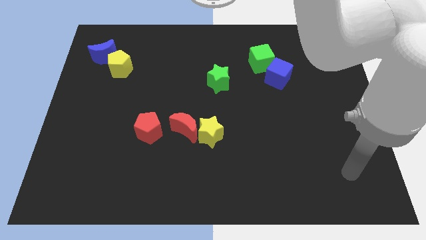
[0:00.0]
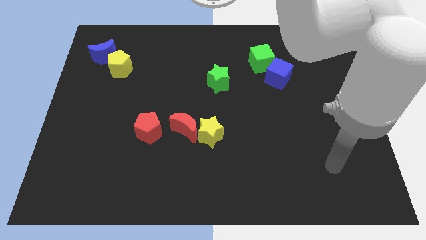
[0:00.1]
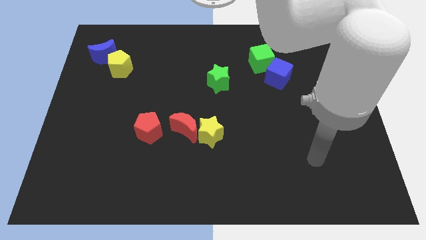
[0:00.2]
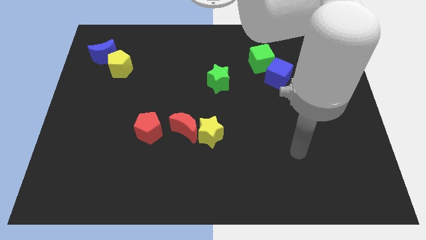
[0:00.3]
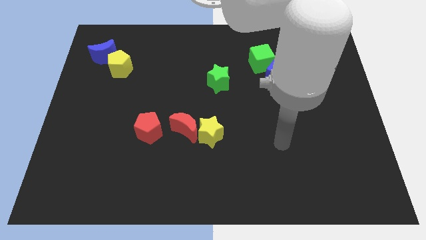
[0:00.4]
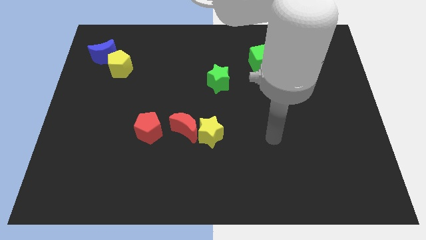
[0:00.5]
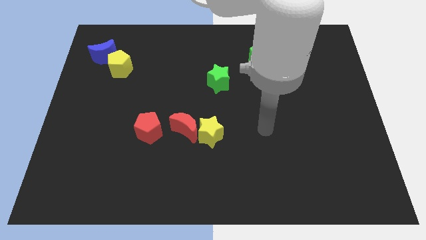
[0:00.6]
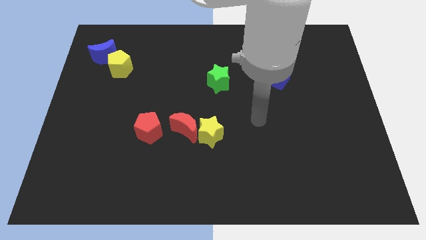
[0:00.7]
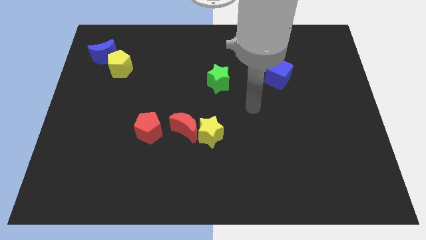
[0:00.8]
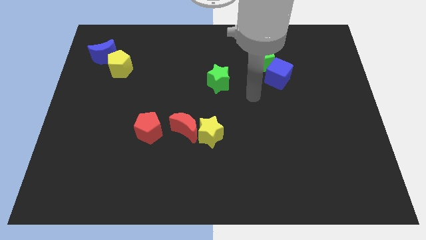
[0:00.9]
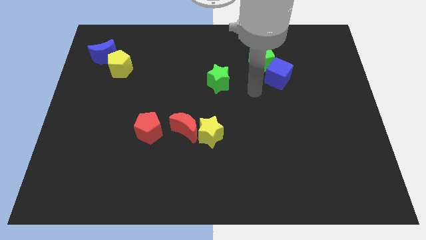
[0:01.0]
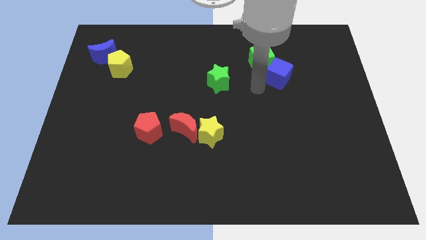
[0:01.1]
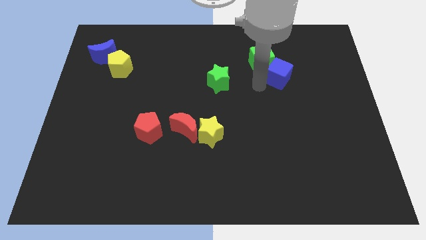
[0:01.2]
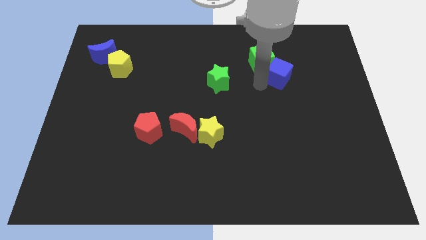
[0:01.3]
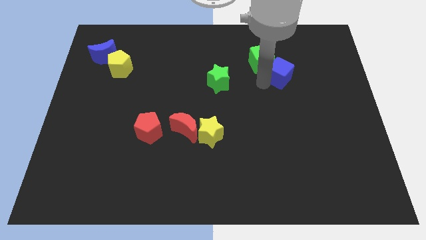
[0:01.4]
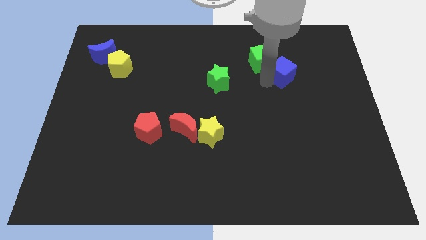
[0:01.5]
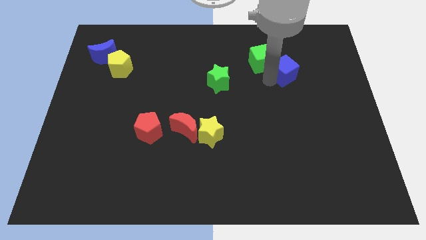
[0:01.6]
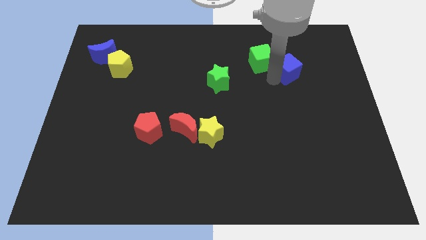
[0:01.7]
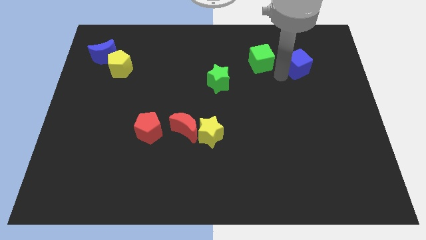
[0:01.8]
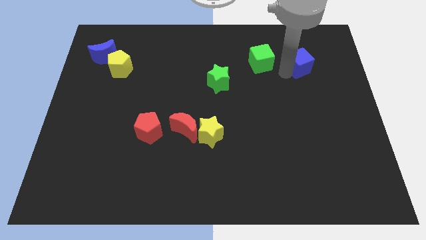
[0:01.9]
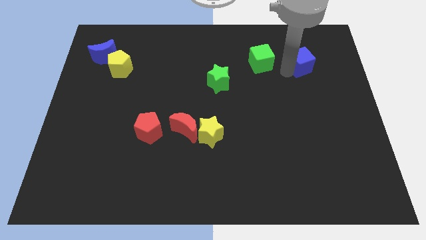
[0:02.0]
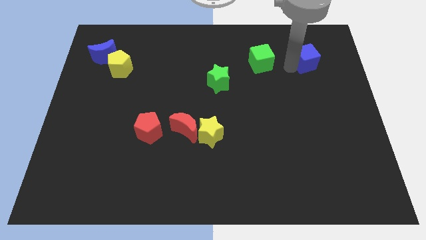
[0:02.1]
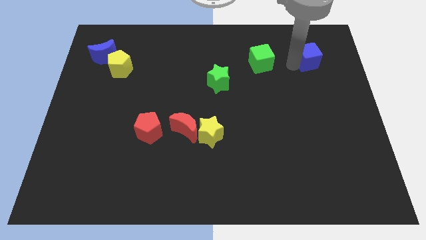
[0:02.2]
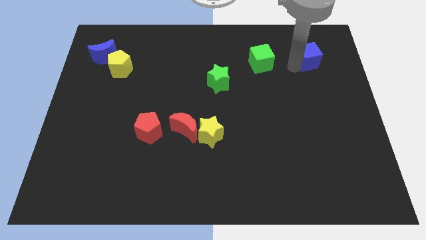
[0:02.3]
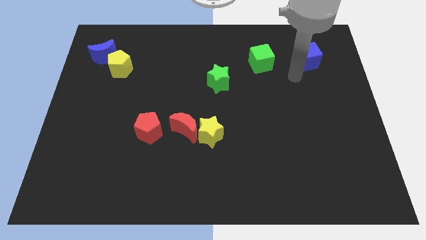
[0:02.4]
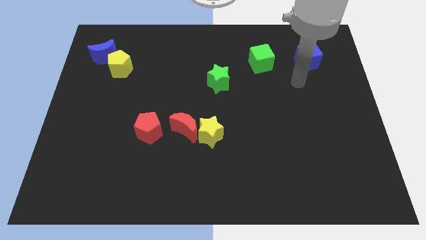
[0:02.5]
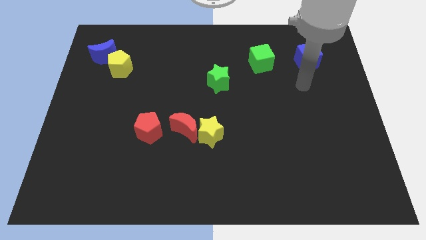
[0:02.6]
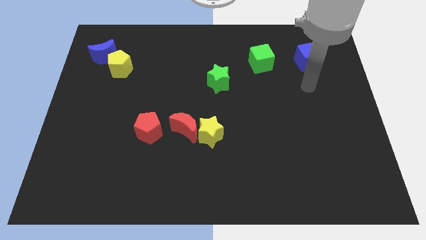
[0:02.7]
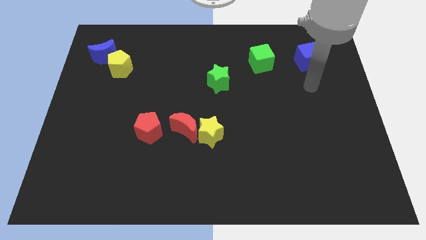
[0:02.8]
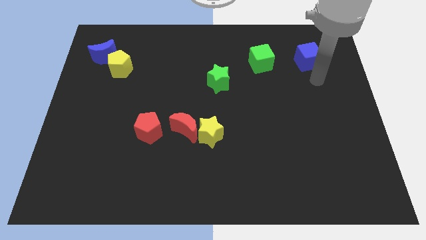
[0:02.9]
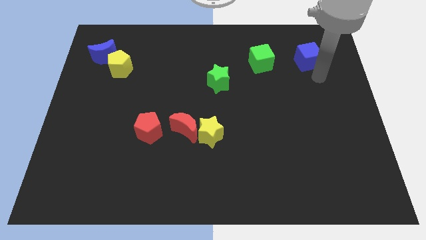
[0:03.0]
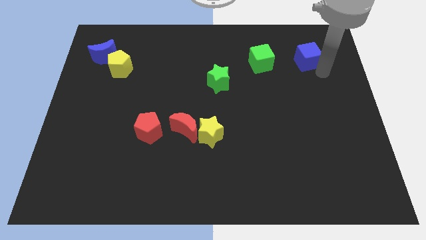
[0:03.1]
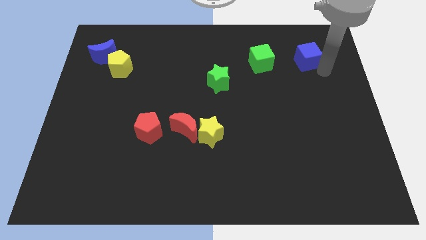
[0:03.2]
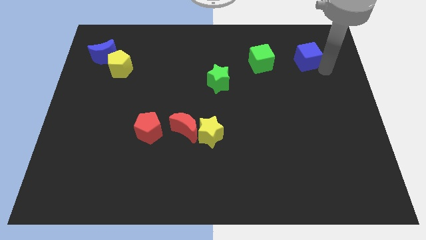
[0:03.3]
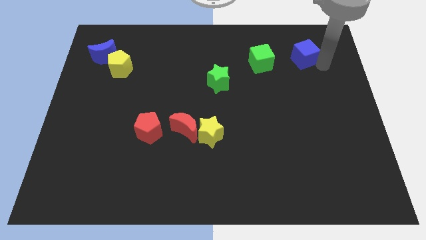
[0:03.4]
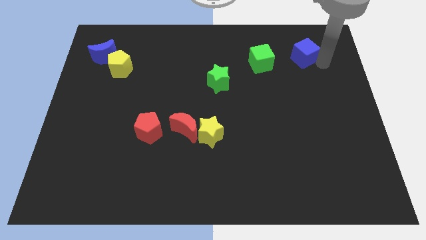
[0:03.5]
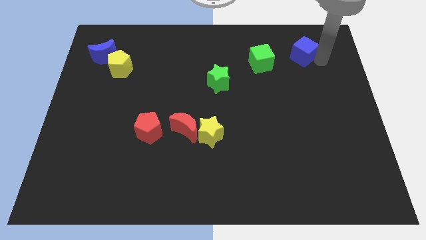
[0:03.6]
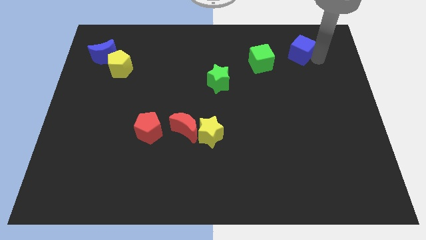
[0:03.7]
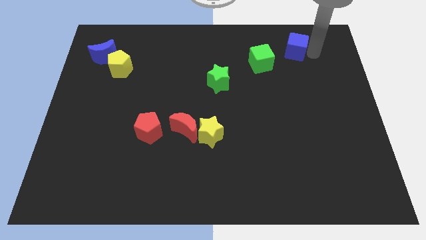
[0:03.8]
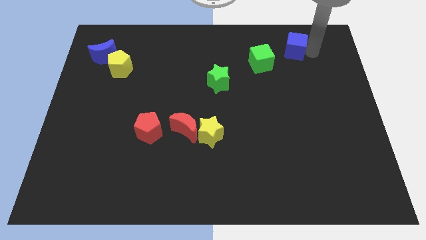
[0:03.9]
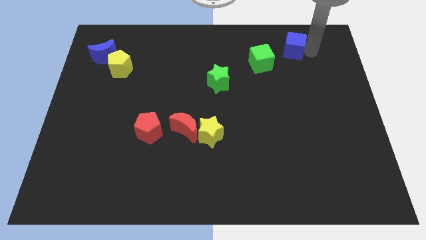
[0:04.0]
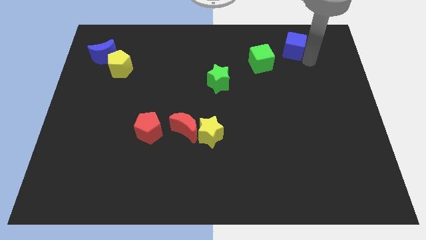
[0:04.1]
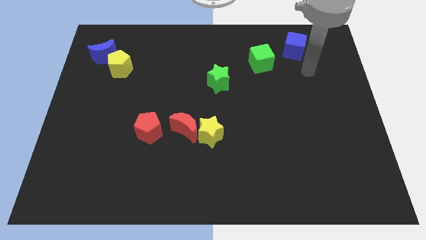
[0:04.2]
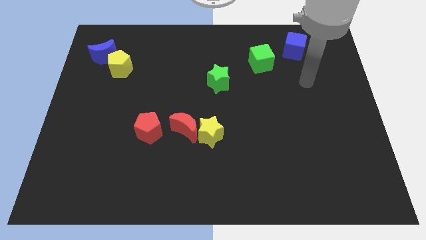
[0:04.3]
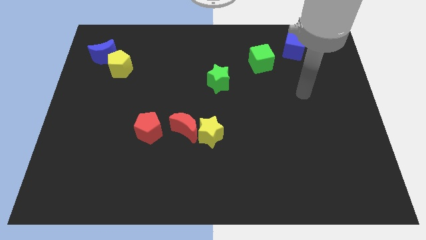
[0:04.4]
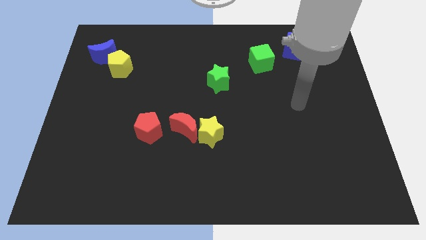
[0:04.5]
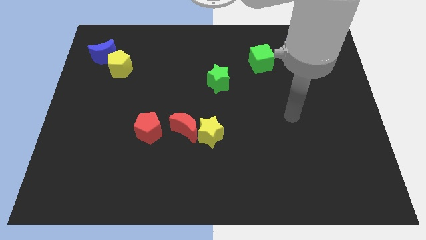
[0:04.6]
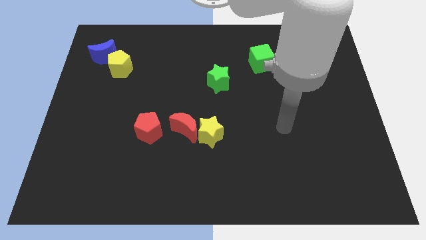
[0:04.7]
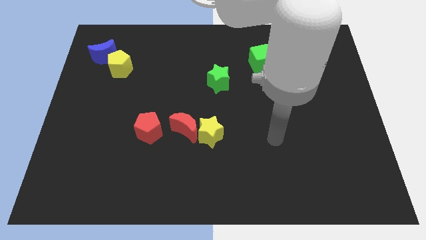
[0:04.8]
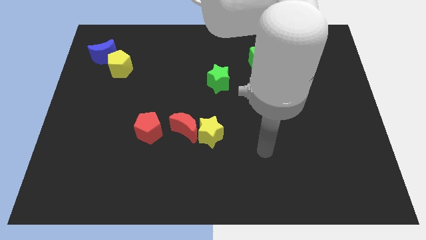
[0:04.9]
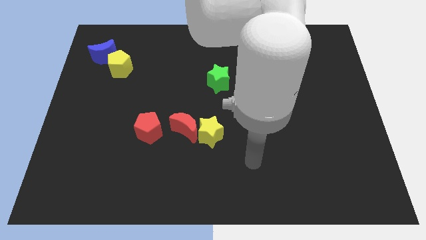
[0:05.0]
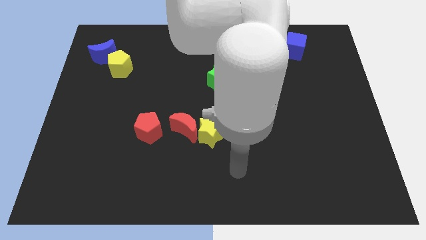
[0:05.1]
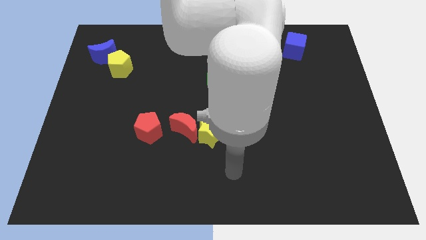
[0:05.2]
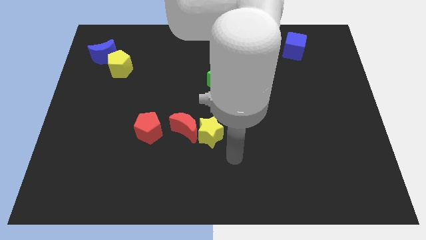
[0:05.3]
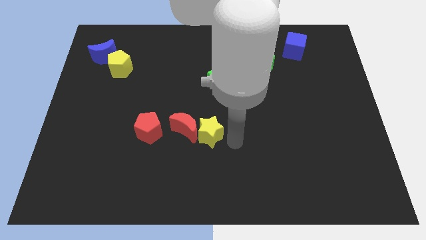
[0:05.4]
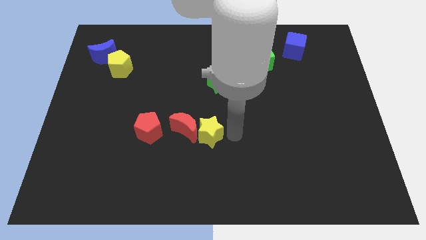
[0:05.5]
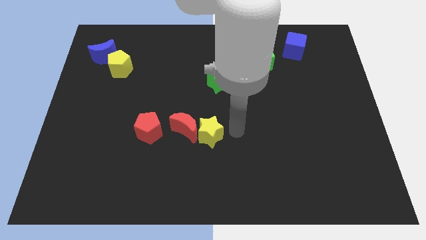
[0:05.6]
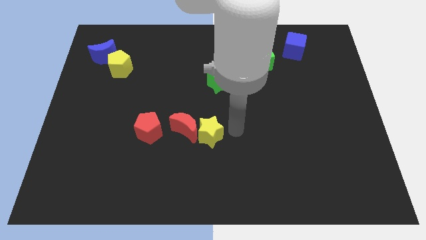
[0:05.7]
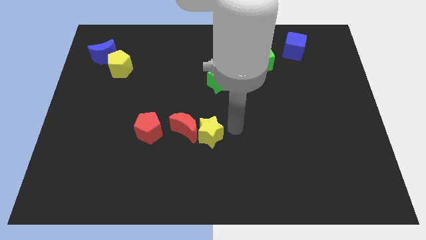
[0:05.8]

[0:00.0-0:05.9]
move the blue cube to the top of the board

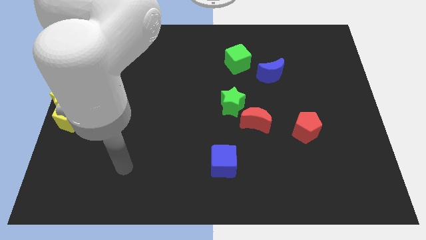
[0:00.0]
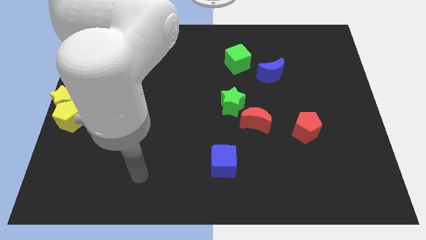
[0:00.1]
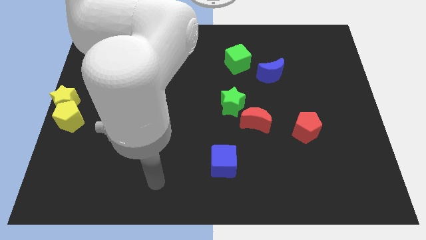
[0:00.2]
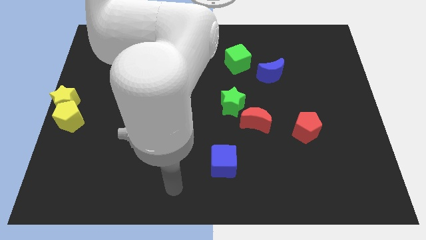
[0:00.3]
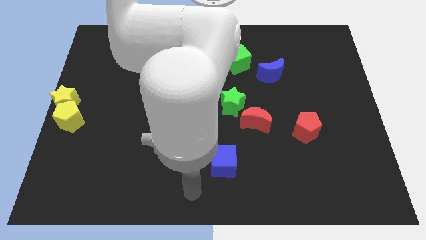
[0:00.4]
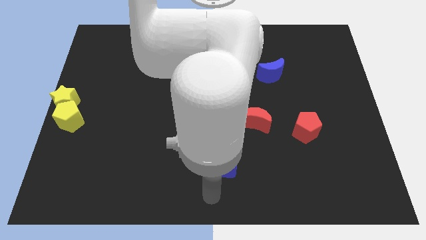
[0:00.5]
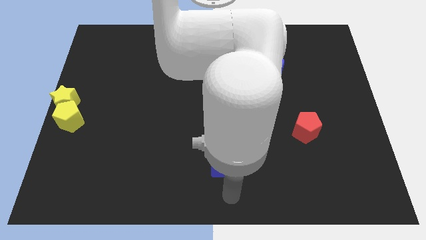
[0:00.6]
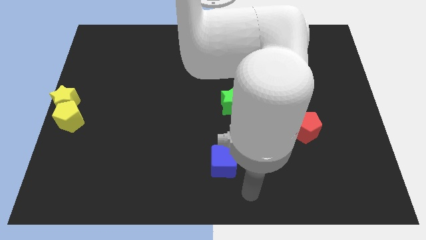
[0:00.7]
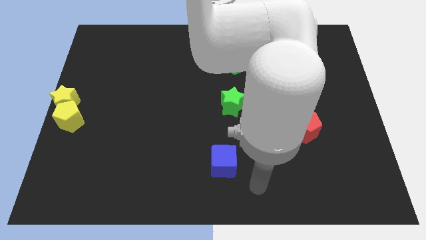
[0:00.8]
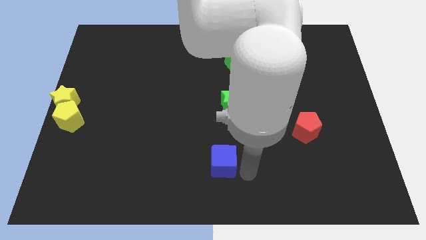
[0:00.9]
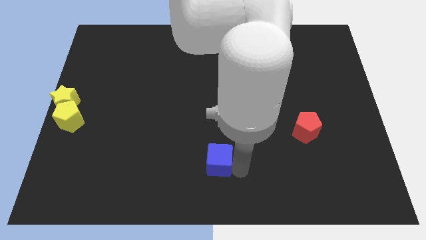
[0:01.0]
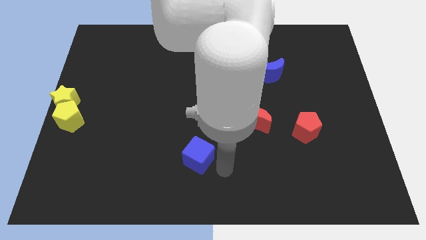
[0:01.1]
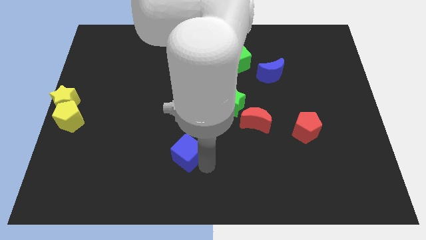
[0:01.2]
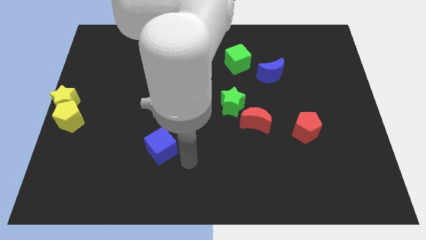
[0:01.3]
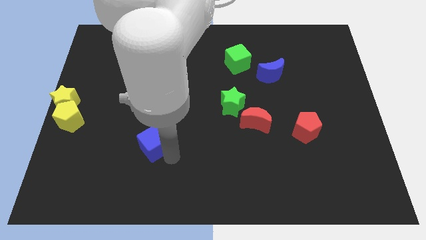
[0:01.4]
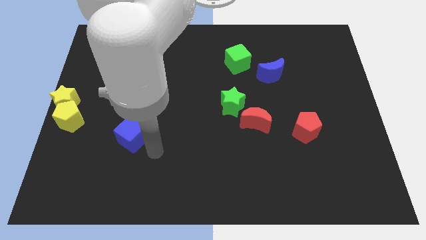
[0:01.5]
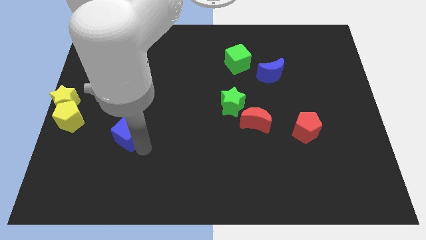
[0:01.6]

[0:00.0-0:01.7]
drag the blue cube diagonally bottom left to the green star

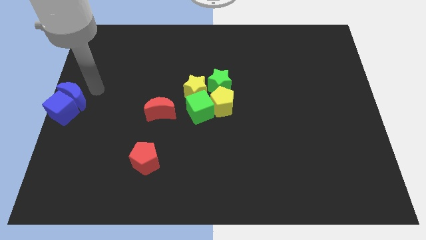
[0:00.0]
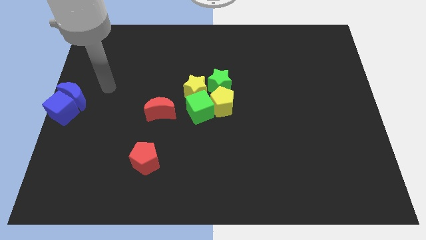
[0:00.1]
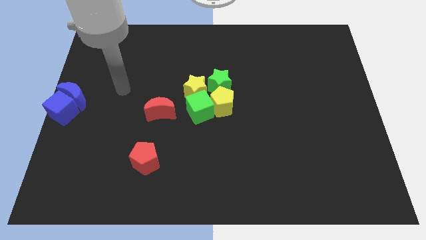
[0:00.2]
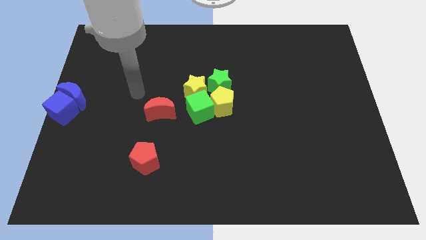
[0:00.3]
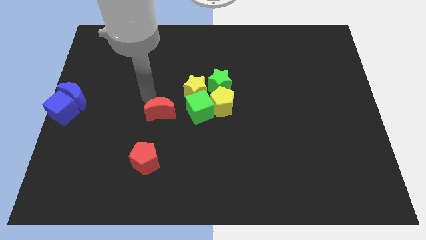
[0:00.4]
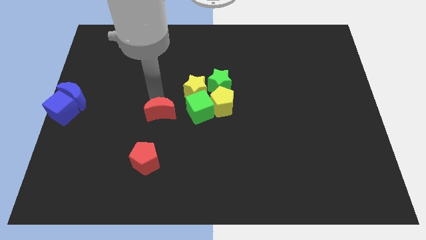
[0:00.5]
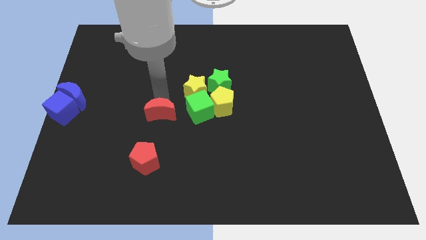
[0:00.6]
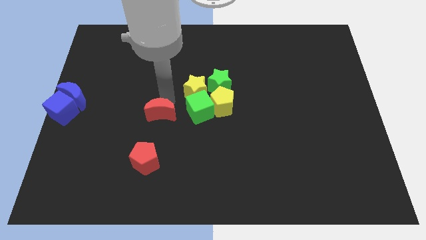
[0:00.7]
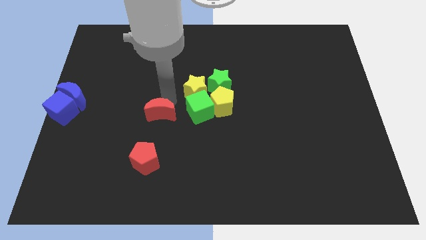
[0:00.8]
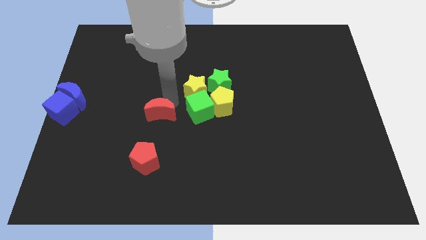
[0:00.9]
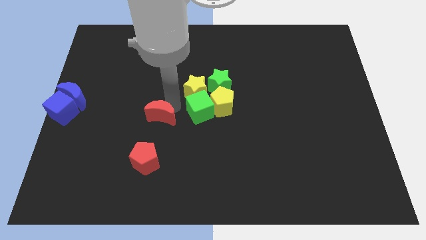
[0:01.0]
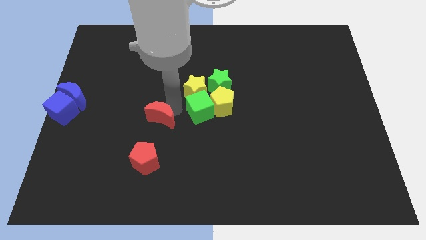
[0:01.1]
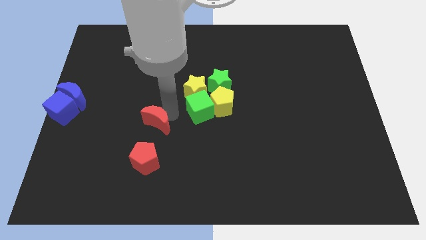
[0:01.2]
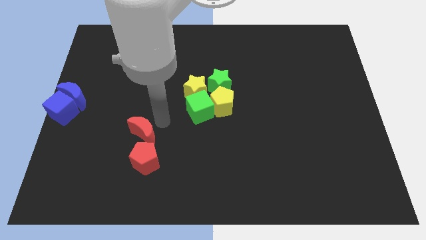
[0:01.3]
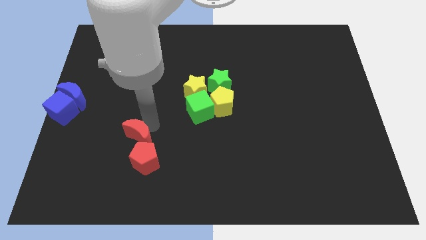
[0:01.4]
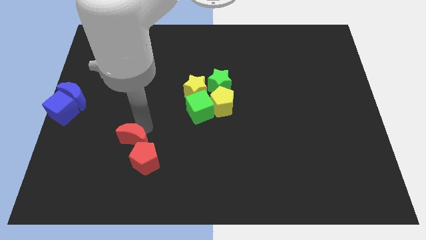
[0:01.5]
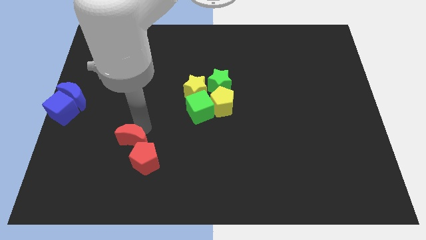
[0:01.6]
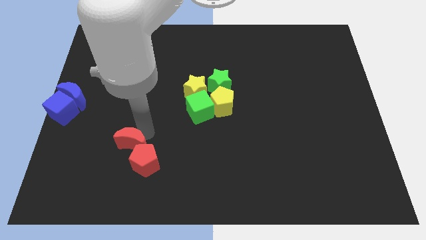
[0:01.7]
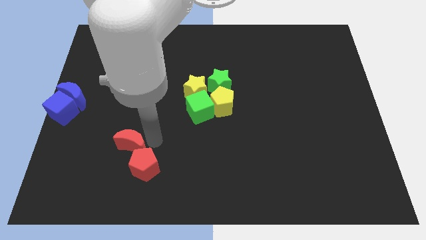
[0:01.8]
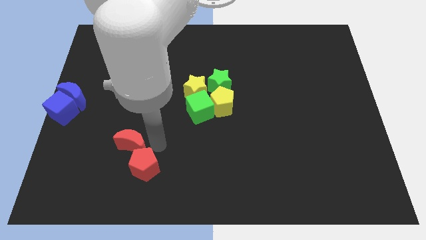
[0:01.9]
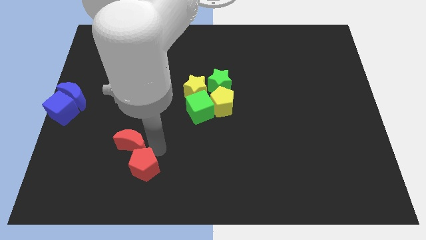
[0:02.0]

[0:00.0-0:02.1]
move red moon and red pentagone towards the blue moon and blue cube
